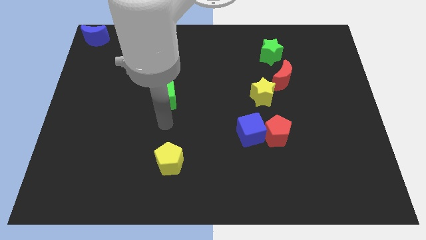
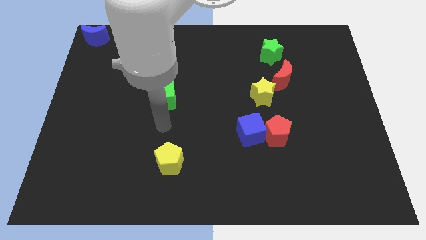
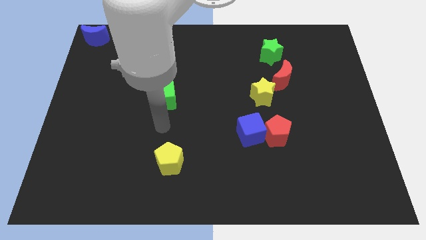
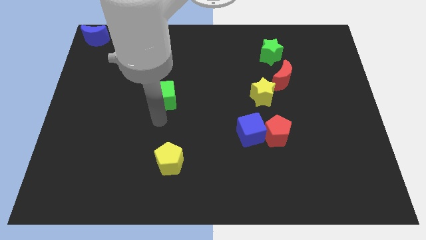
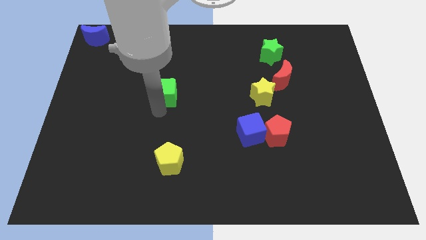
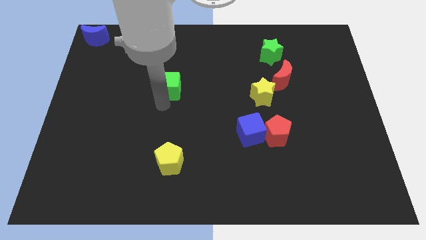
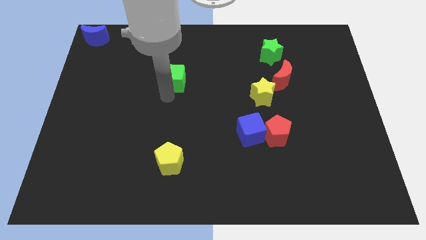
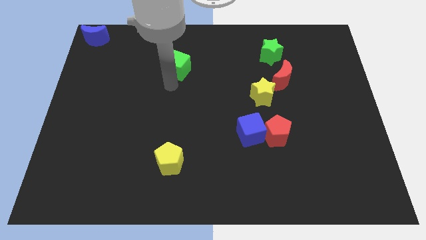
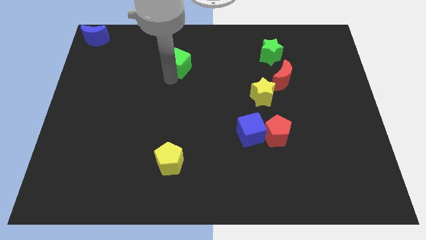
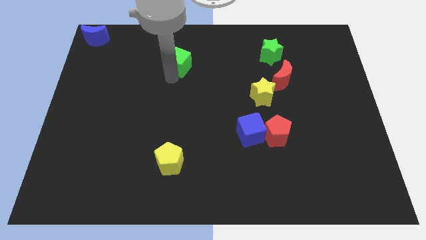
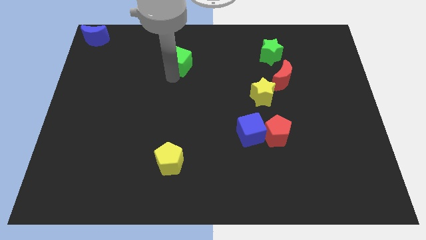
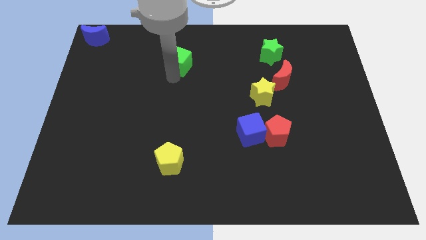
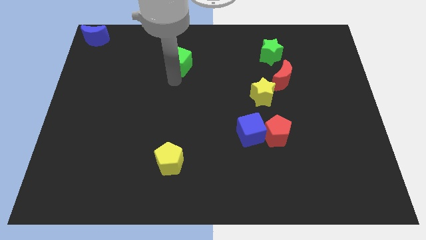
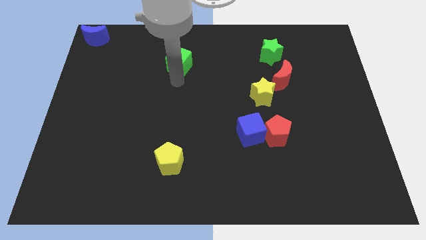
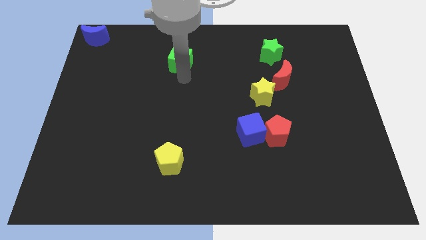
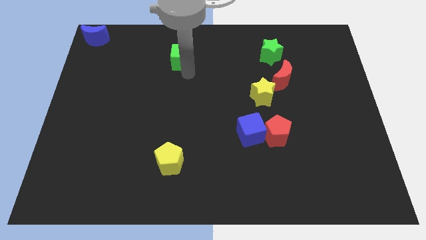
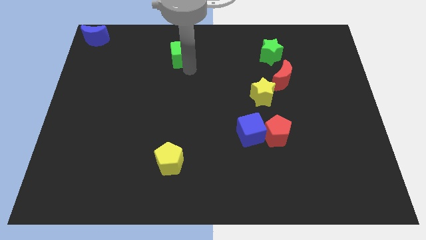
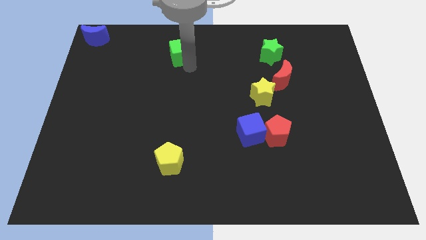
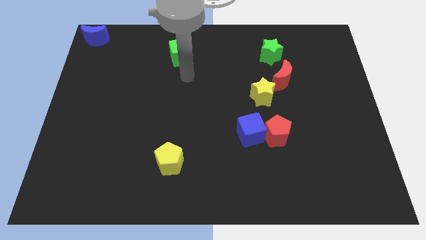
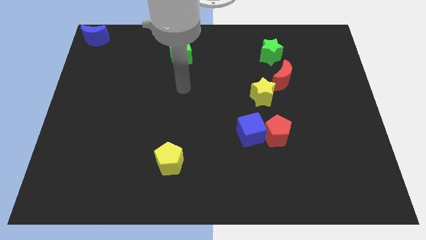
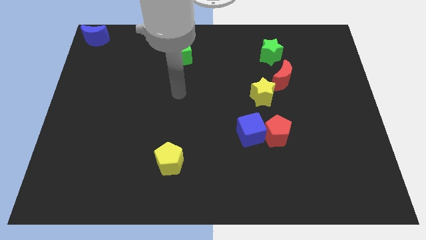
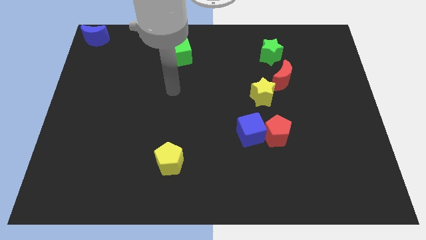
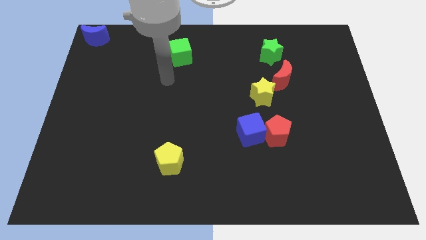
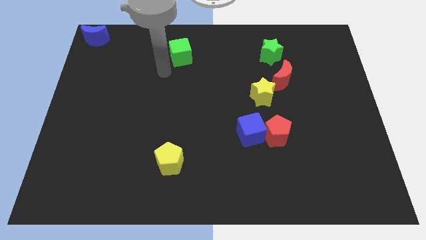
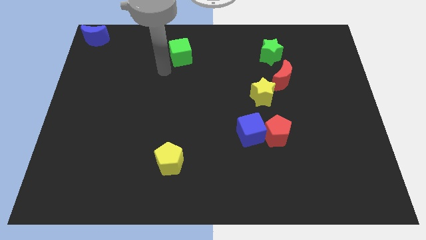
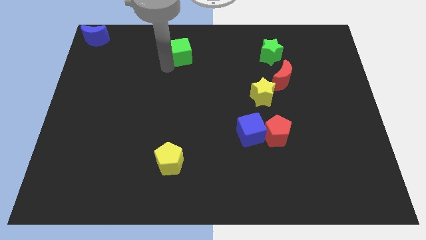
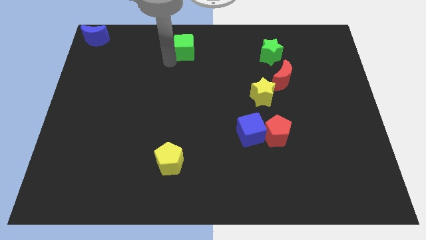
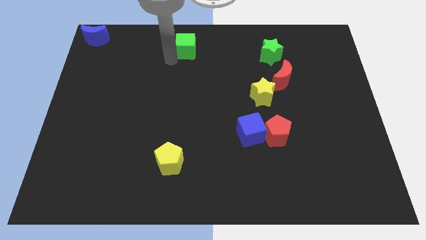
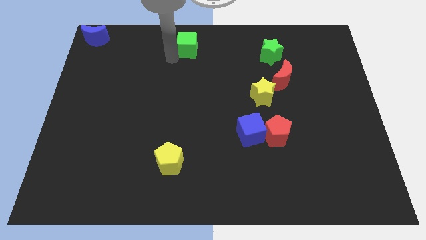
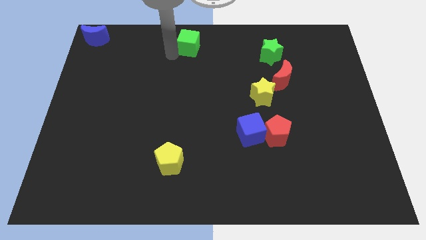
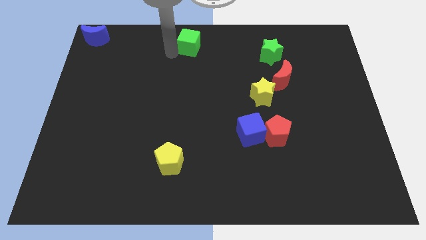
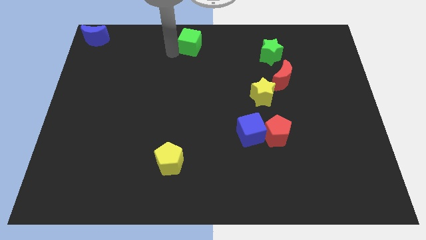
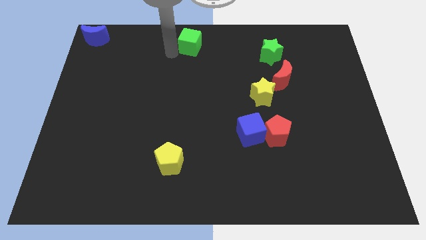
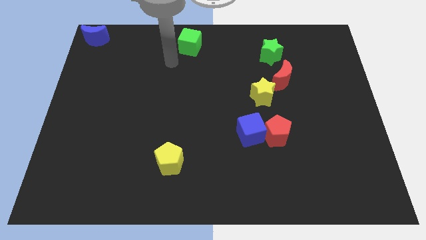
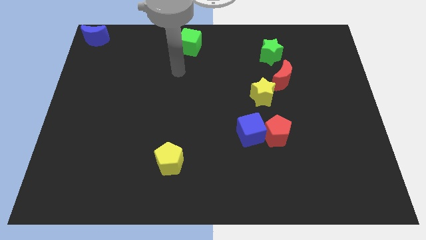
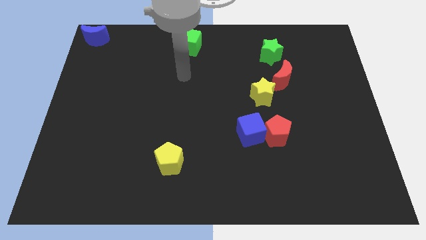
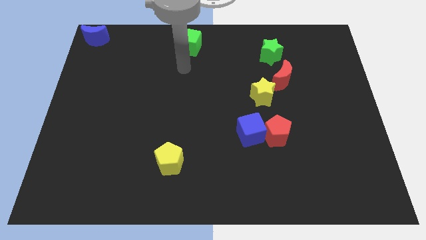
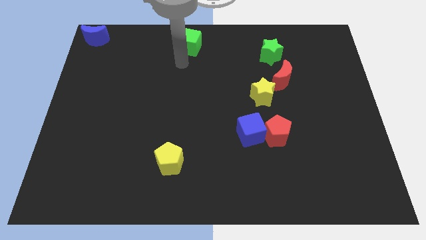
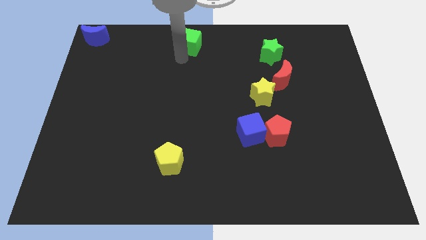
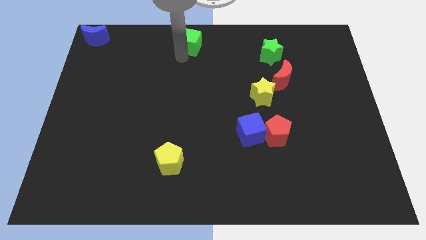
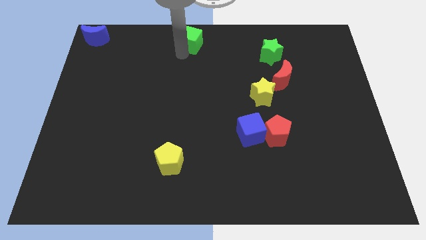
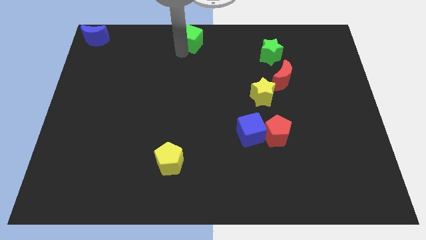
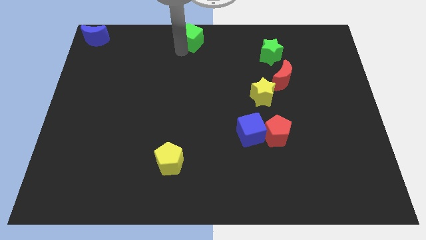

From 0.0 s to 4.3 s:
move the green cube to the top center of the board

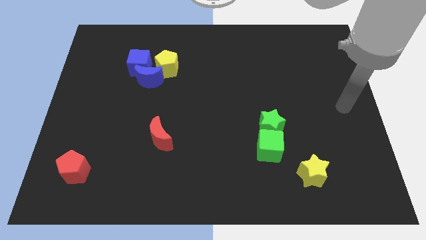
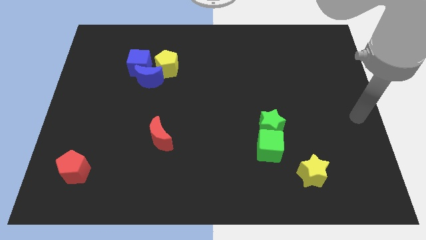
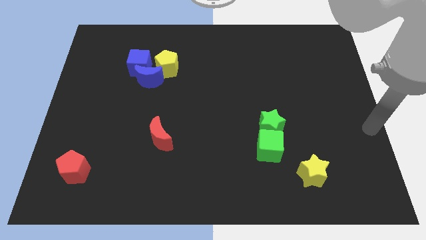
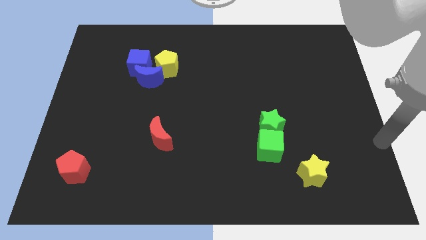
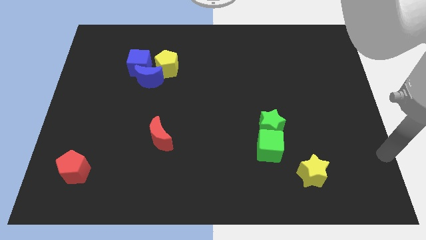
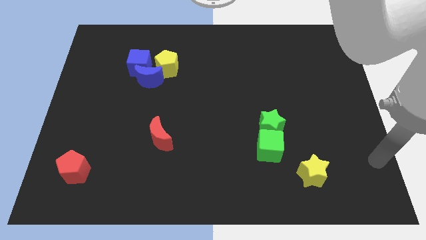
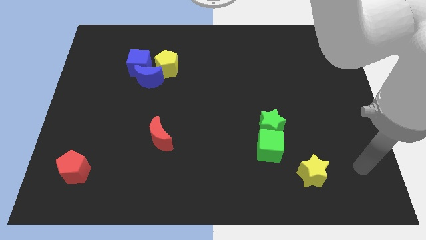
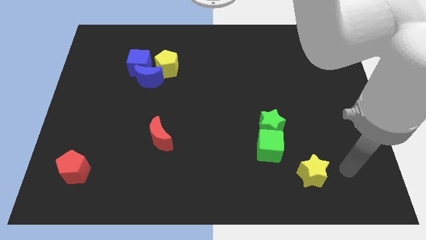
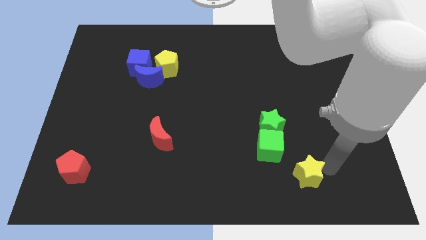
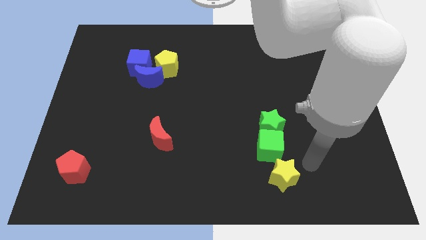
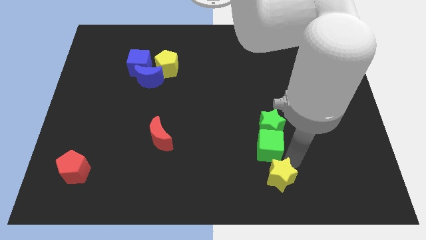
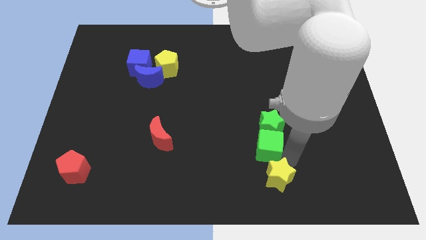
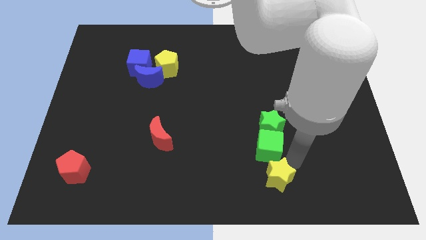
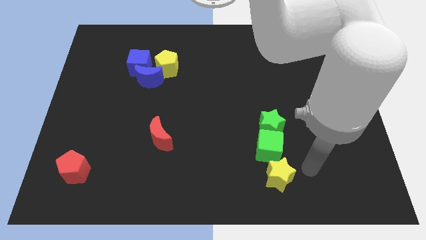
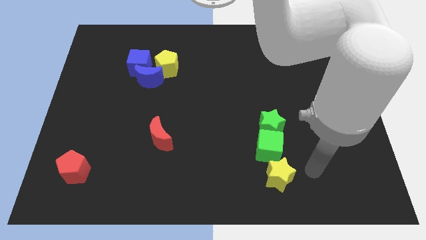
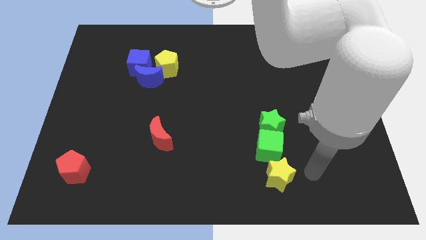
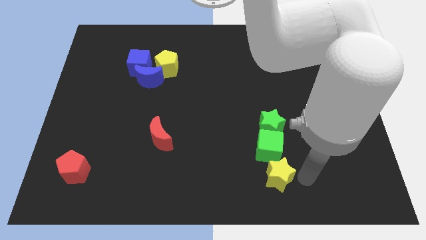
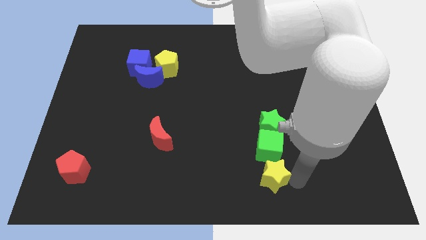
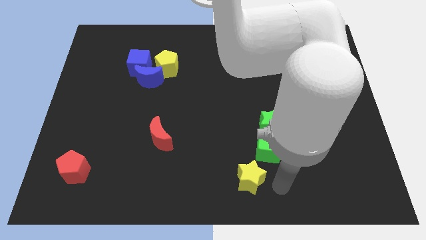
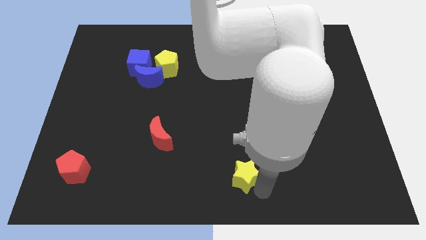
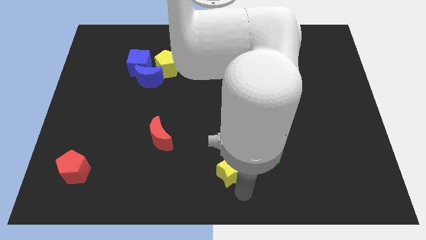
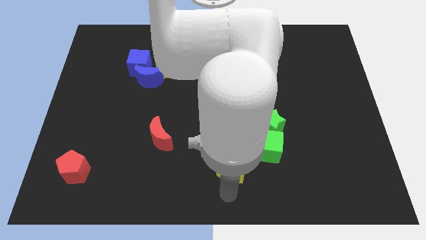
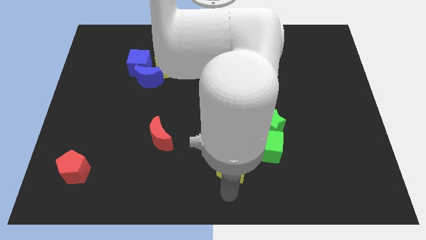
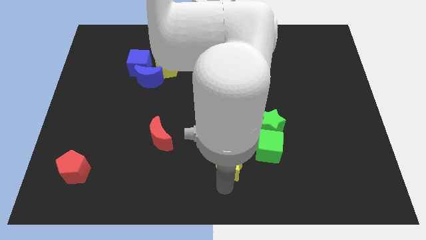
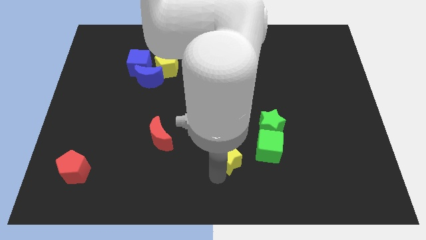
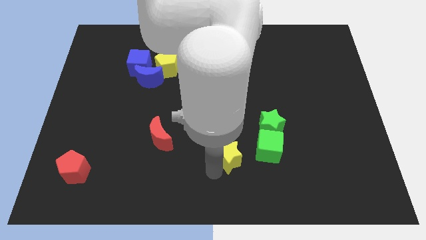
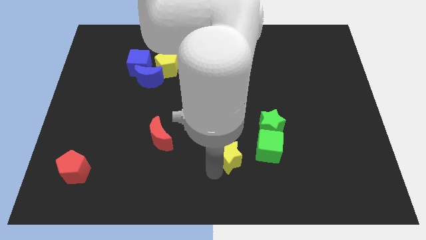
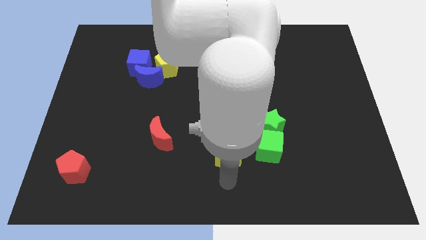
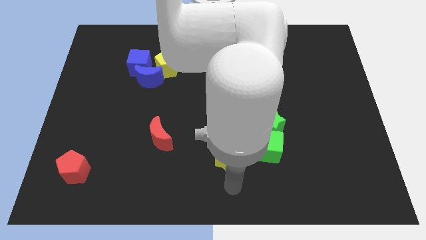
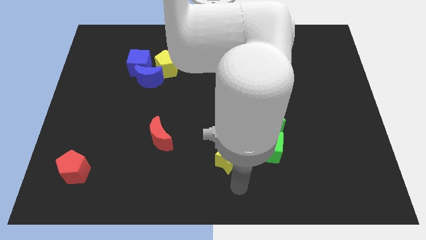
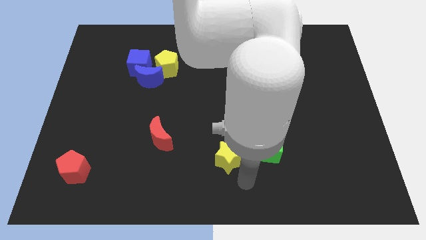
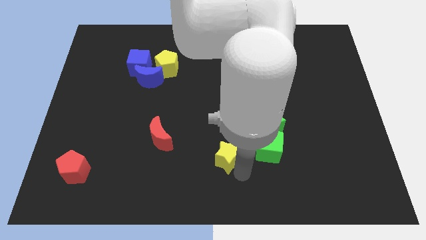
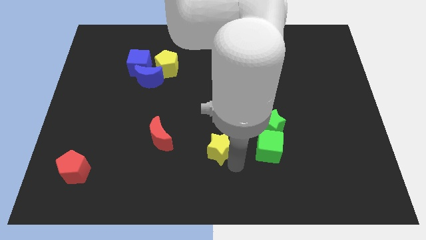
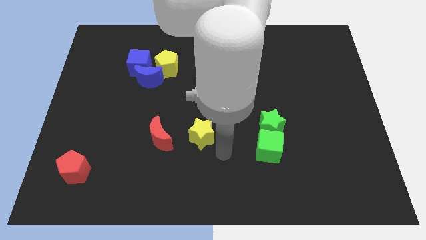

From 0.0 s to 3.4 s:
slide the yellow star to the right side of the red moon

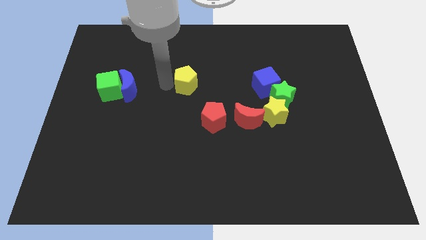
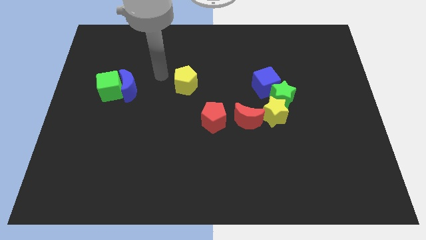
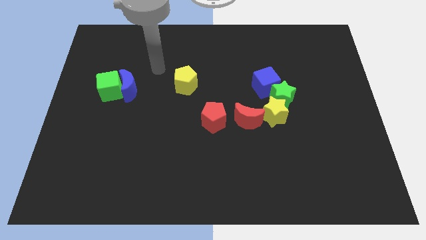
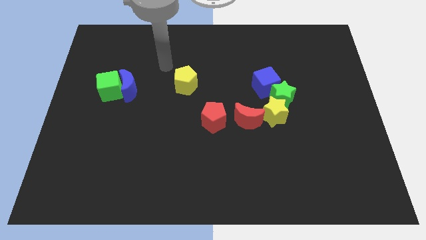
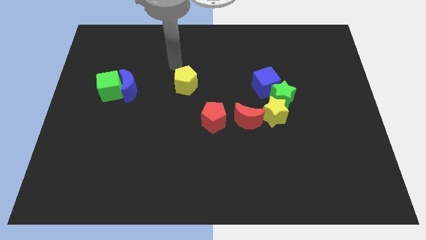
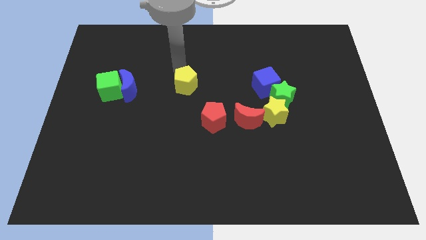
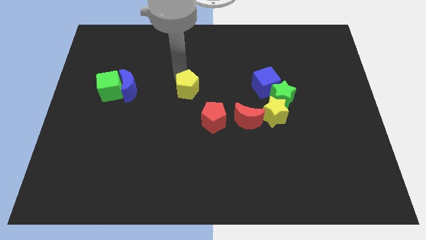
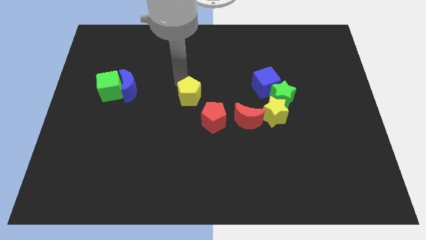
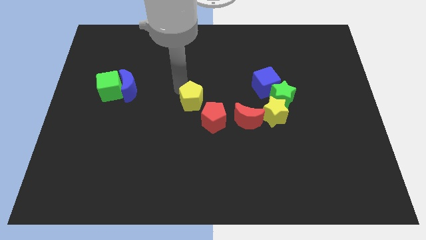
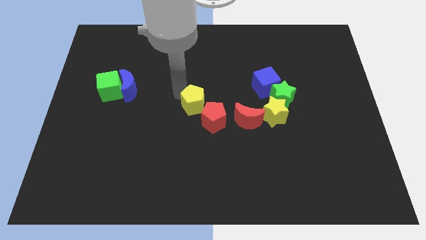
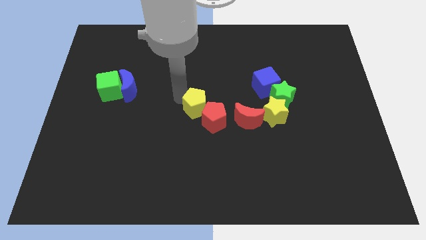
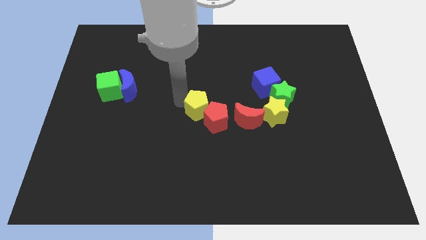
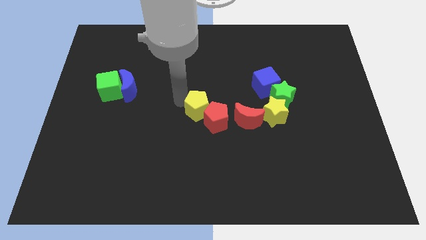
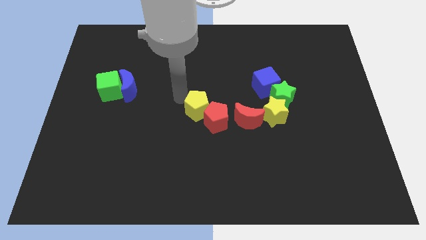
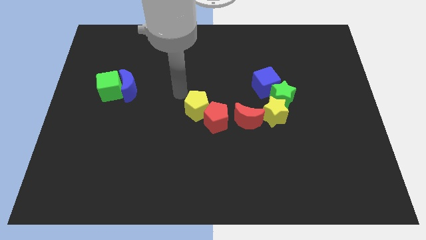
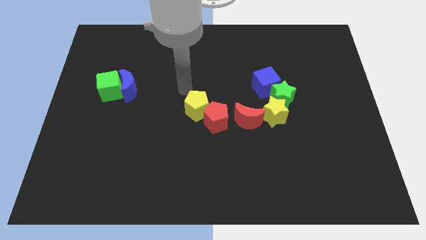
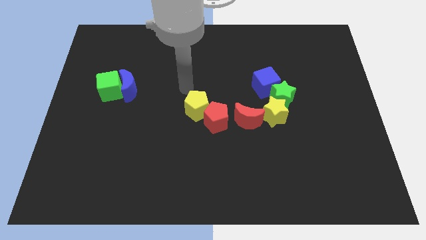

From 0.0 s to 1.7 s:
push the yellow pentagon into the red pentagon
